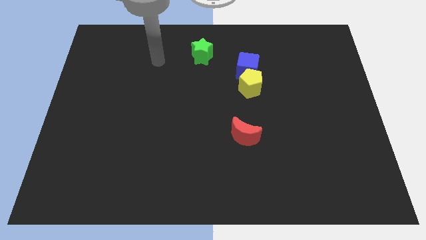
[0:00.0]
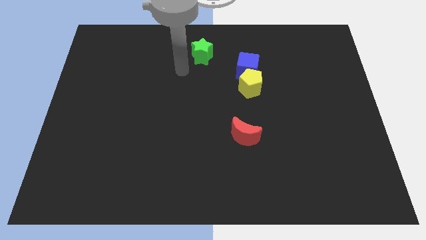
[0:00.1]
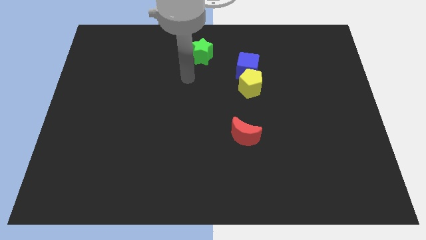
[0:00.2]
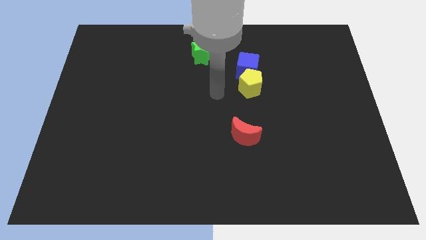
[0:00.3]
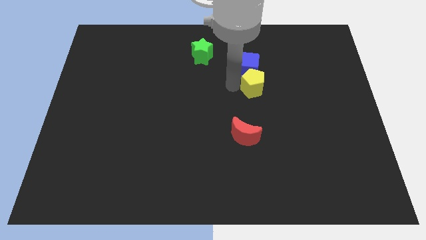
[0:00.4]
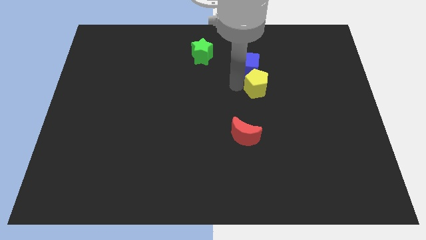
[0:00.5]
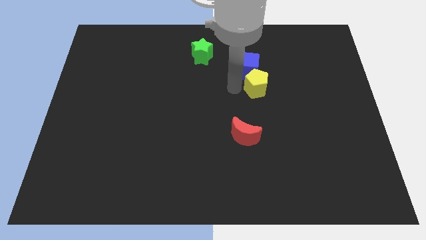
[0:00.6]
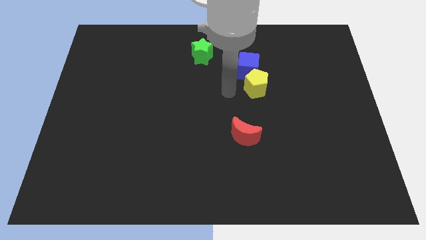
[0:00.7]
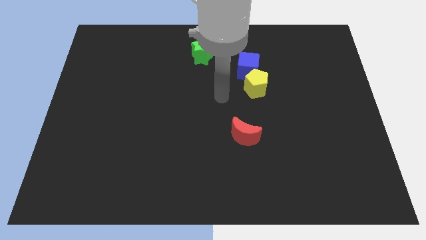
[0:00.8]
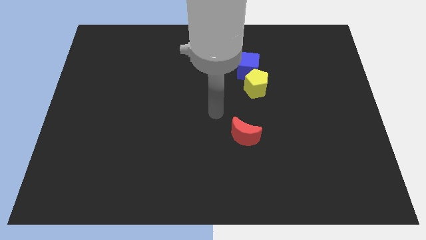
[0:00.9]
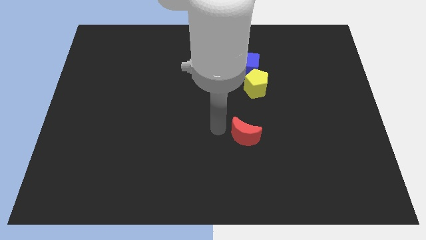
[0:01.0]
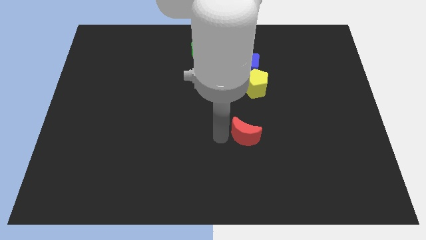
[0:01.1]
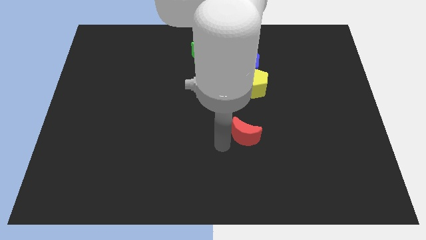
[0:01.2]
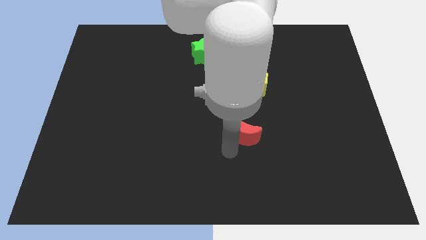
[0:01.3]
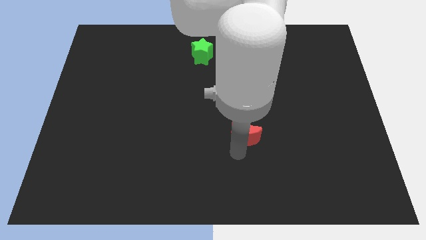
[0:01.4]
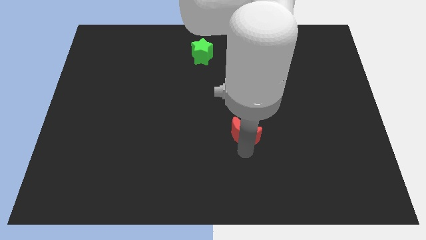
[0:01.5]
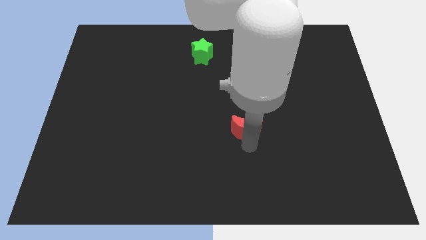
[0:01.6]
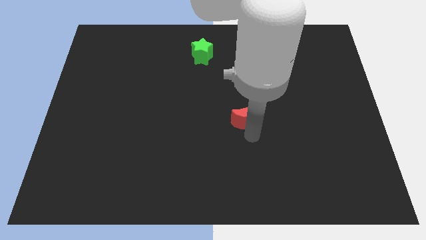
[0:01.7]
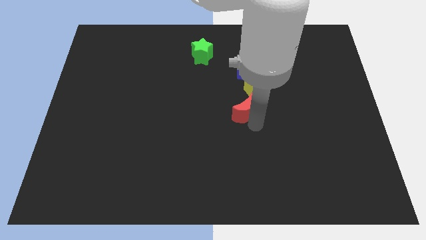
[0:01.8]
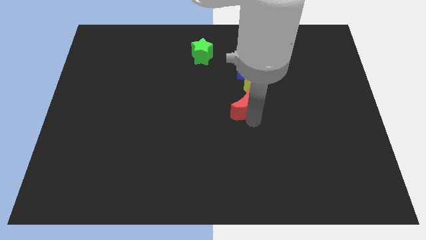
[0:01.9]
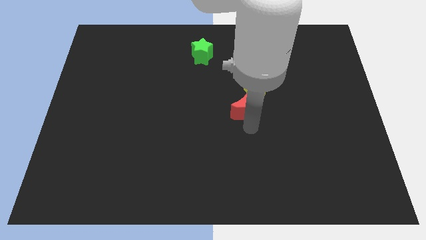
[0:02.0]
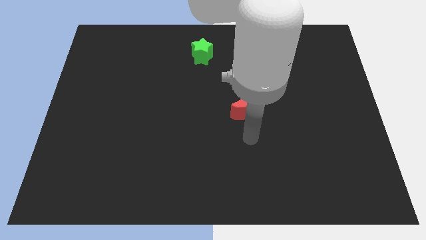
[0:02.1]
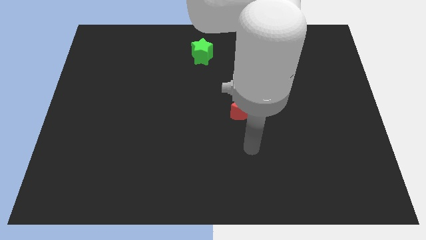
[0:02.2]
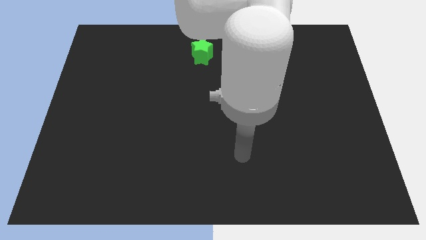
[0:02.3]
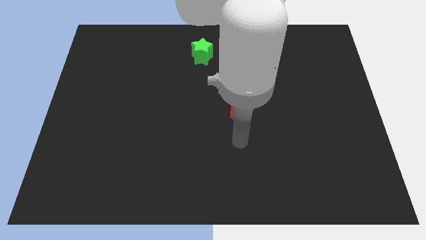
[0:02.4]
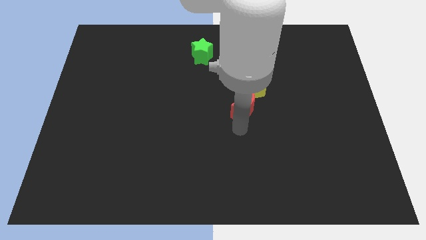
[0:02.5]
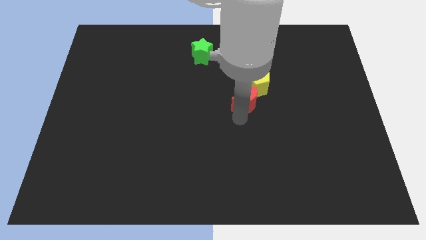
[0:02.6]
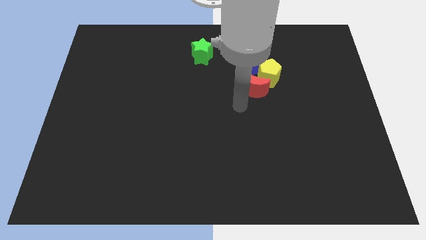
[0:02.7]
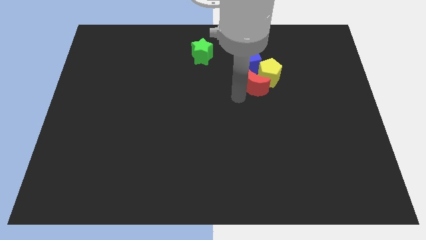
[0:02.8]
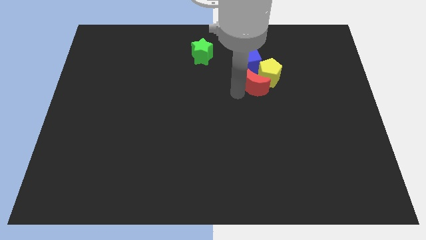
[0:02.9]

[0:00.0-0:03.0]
push the red moon close to the pentagon

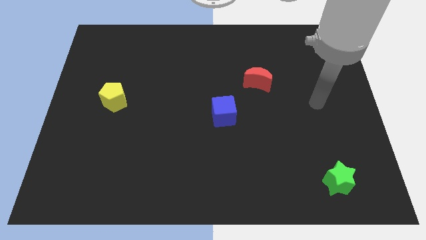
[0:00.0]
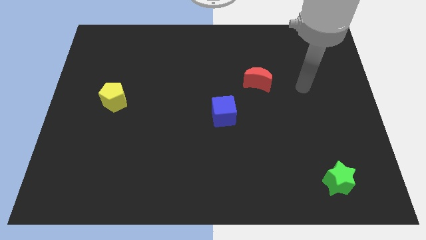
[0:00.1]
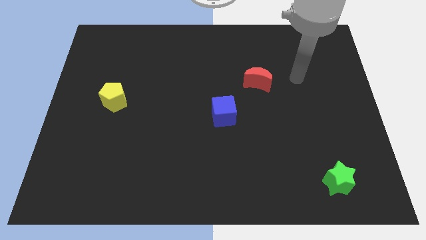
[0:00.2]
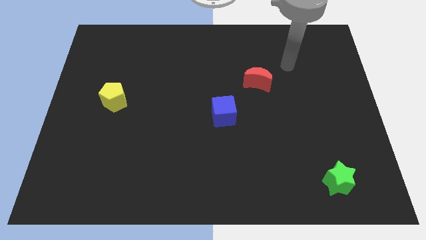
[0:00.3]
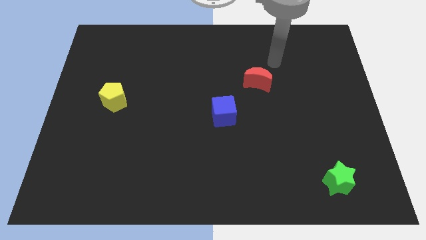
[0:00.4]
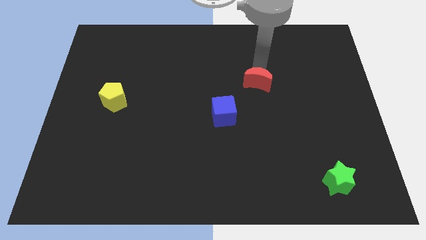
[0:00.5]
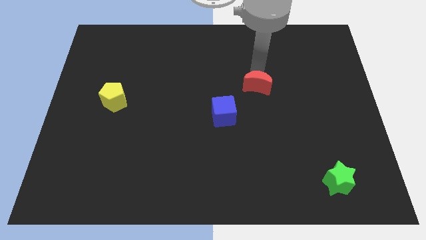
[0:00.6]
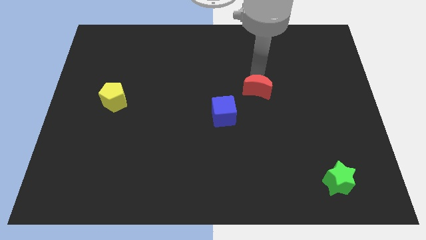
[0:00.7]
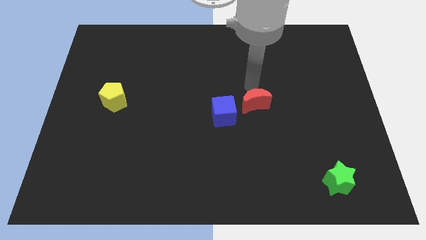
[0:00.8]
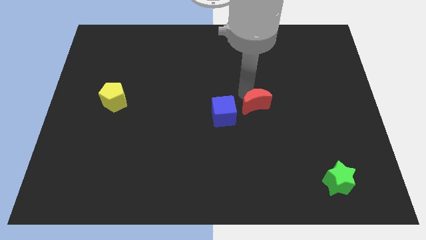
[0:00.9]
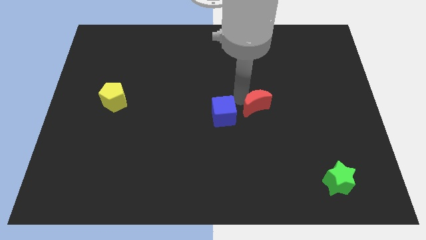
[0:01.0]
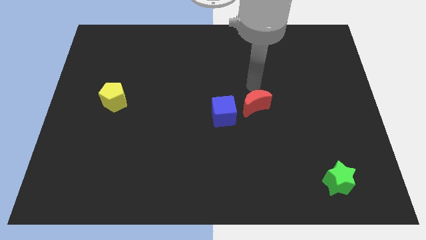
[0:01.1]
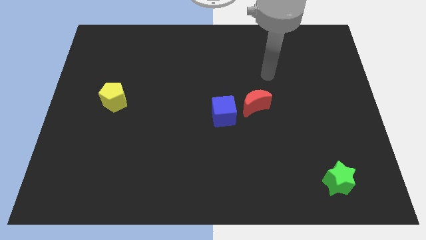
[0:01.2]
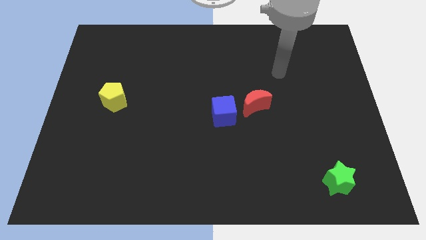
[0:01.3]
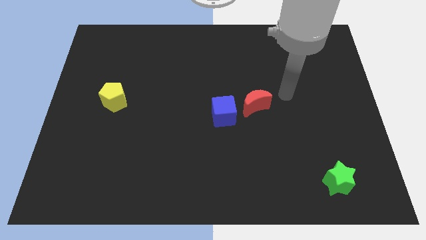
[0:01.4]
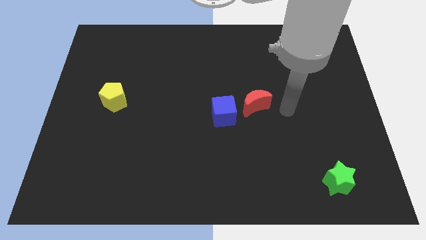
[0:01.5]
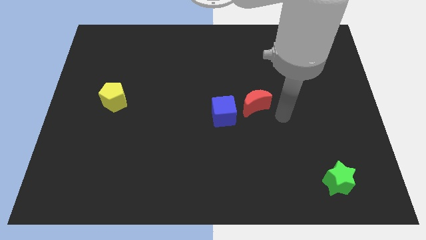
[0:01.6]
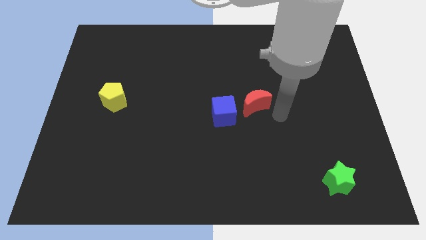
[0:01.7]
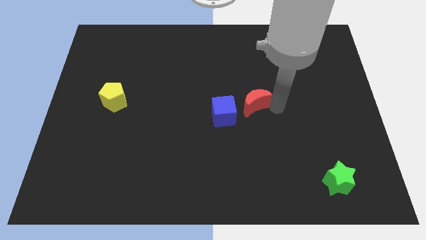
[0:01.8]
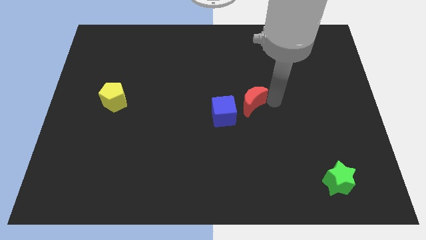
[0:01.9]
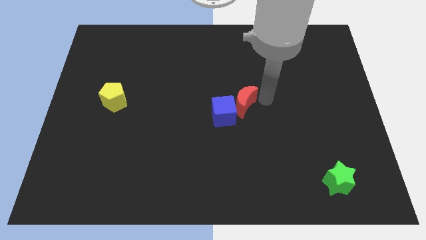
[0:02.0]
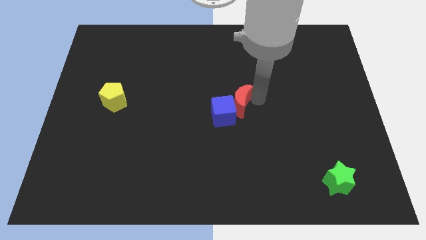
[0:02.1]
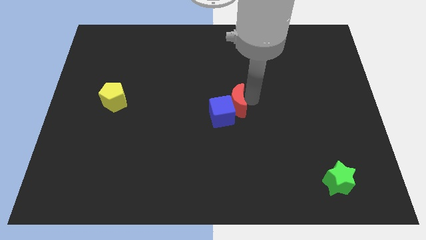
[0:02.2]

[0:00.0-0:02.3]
push the red moon towards the blue cube

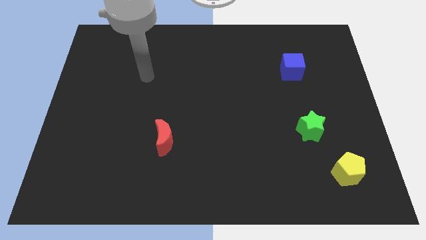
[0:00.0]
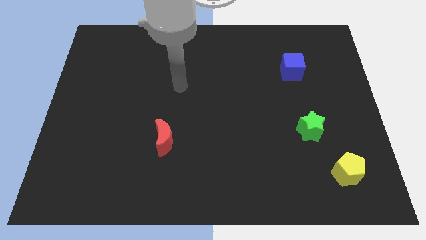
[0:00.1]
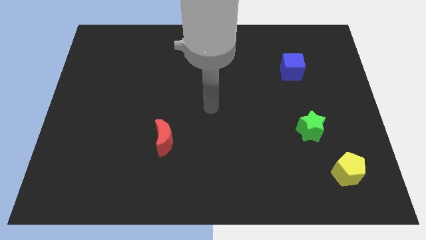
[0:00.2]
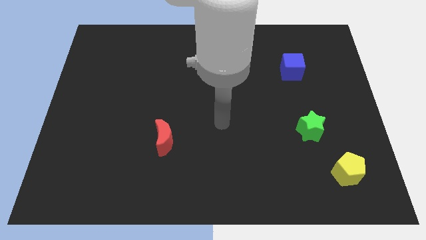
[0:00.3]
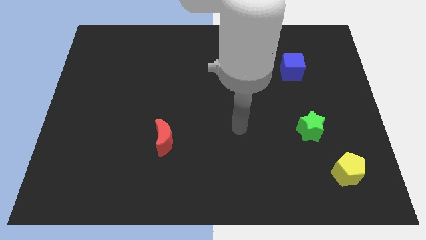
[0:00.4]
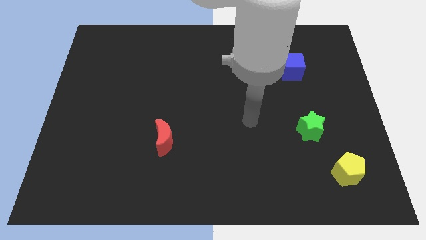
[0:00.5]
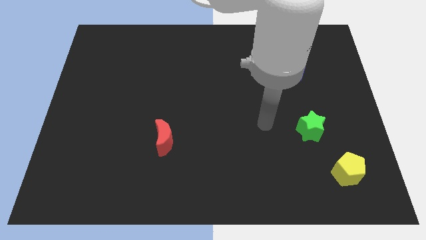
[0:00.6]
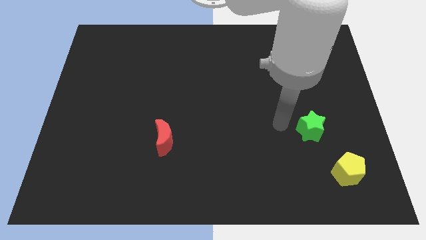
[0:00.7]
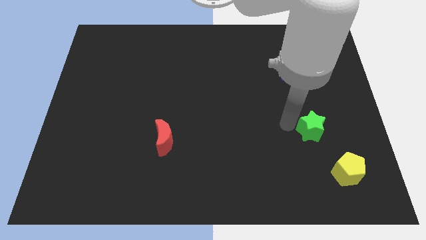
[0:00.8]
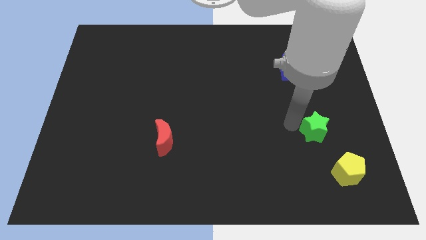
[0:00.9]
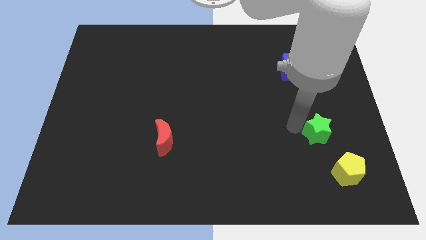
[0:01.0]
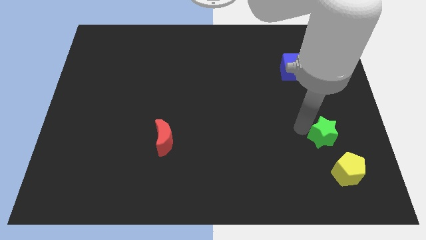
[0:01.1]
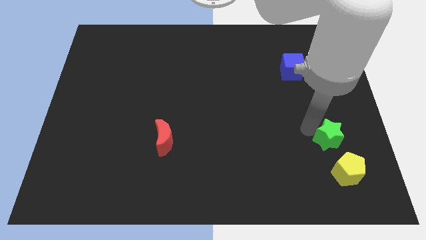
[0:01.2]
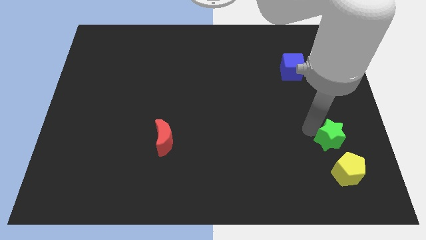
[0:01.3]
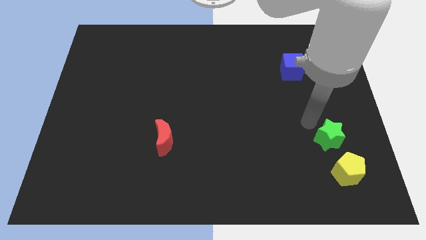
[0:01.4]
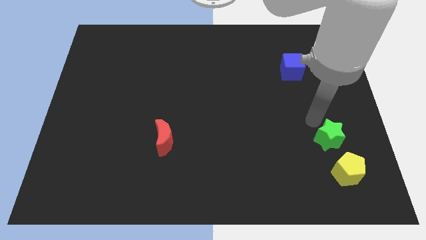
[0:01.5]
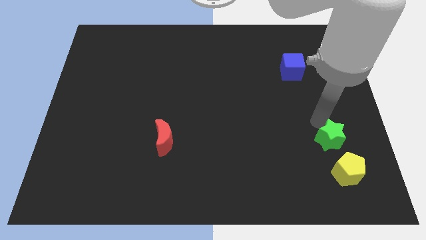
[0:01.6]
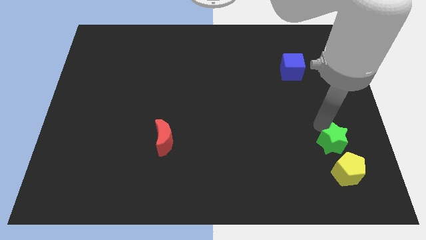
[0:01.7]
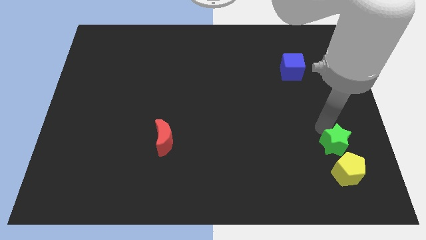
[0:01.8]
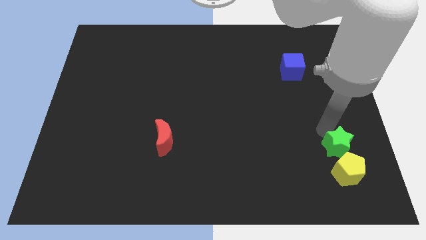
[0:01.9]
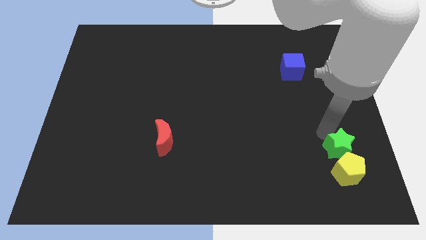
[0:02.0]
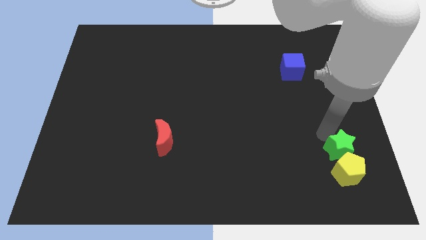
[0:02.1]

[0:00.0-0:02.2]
slide the green block to the yellow block

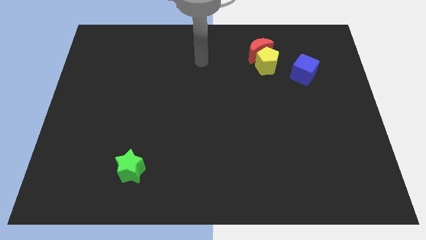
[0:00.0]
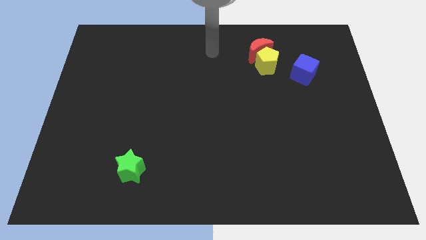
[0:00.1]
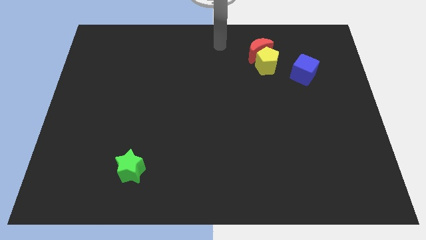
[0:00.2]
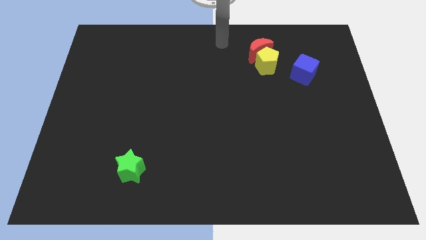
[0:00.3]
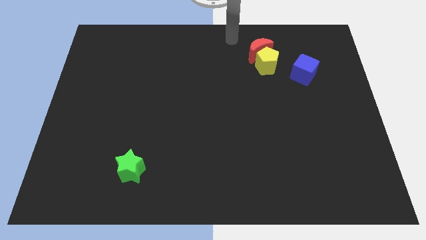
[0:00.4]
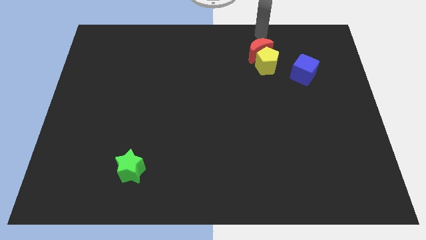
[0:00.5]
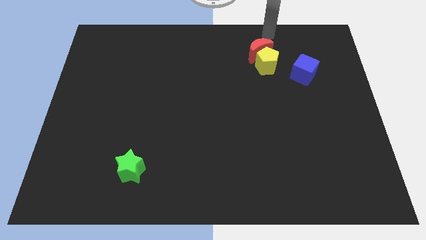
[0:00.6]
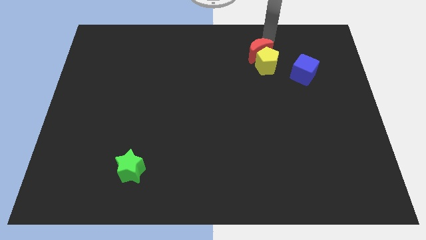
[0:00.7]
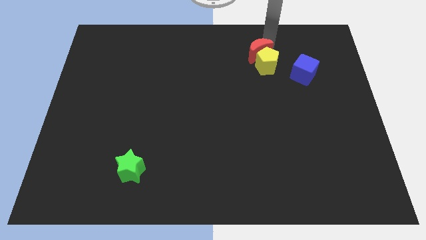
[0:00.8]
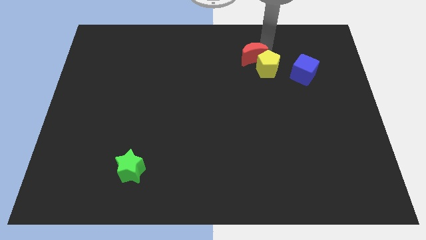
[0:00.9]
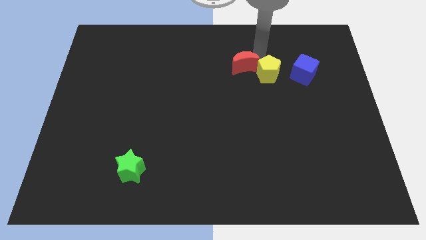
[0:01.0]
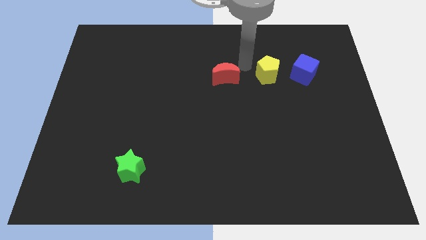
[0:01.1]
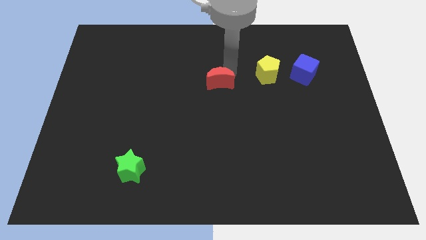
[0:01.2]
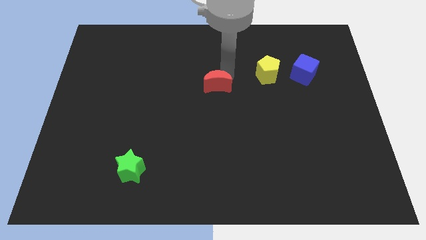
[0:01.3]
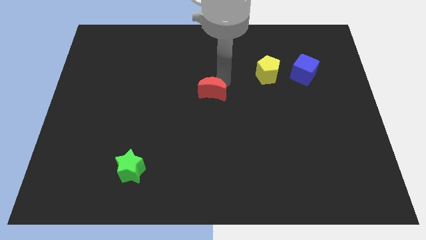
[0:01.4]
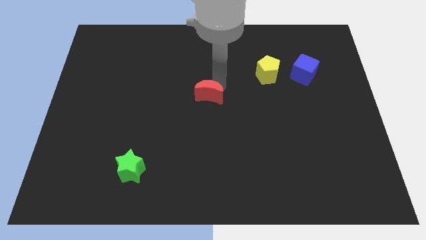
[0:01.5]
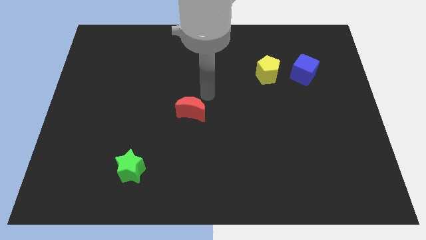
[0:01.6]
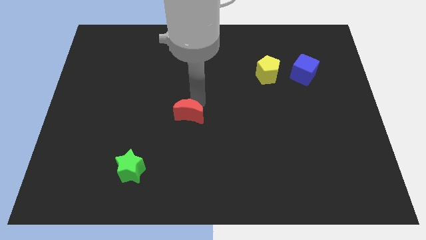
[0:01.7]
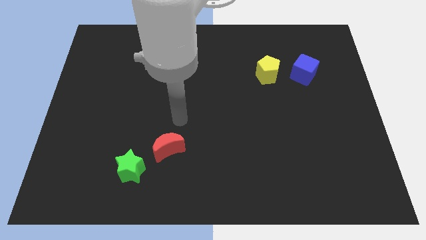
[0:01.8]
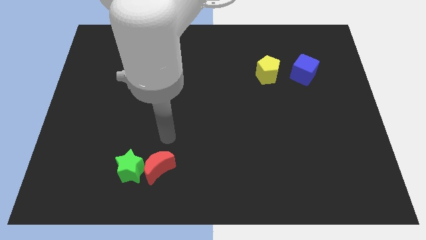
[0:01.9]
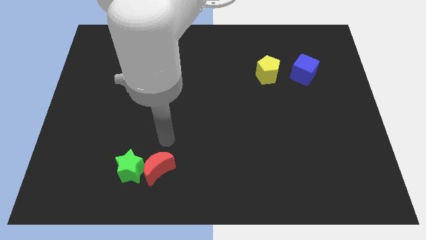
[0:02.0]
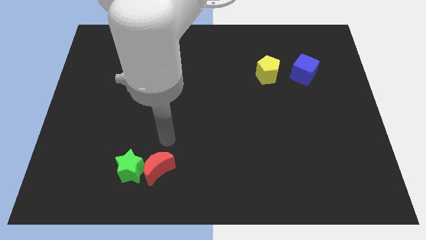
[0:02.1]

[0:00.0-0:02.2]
put the moon to the green star
